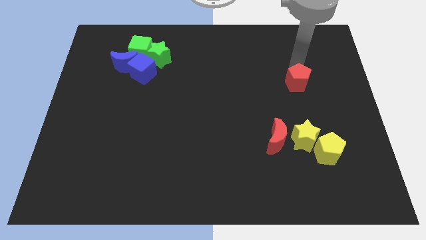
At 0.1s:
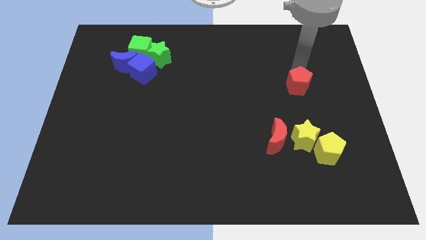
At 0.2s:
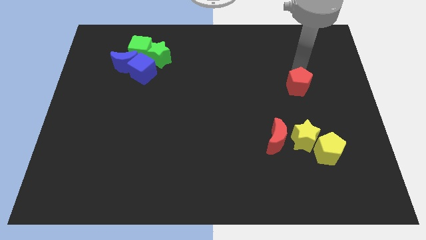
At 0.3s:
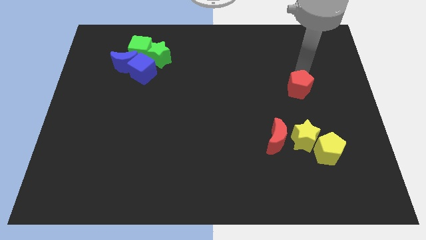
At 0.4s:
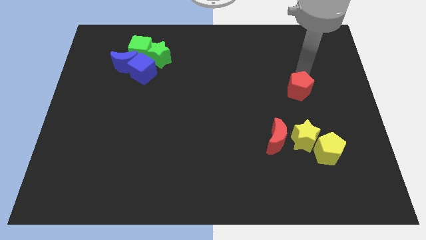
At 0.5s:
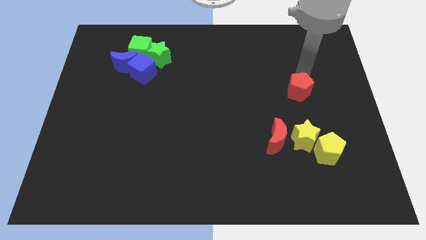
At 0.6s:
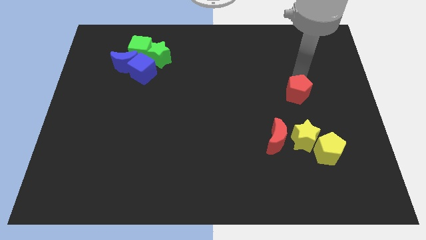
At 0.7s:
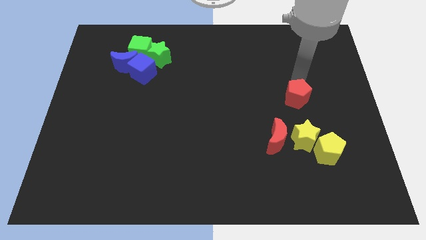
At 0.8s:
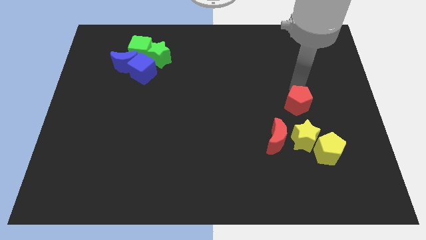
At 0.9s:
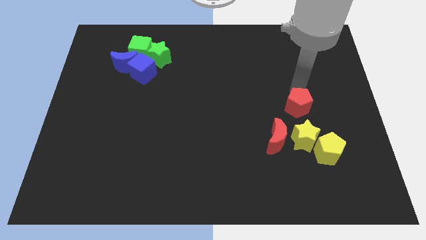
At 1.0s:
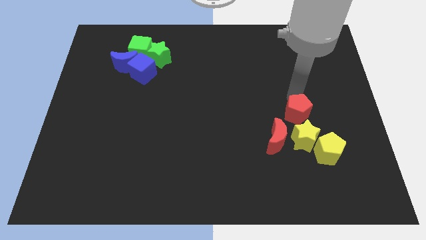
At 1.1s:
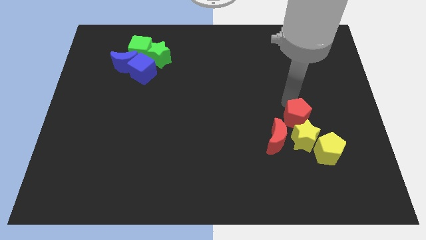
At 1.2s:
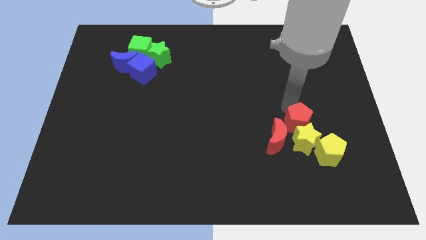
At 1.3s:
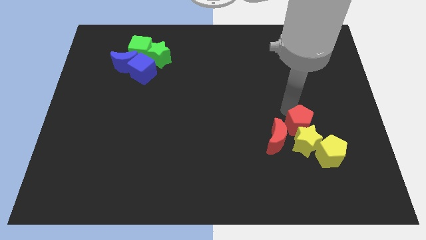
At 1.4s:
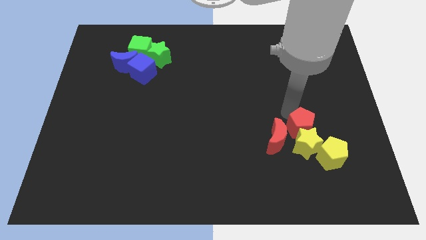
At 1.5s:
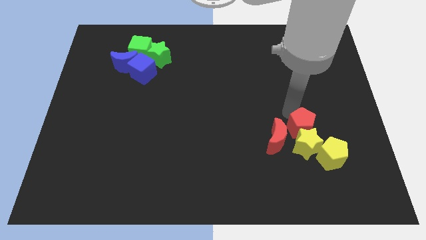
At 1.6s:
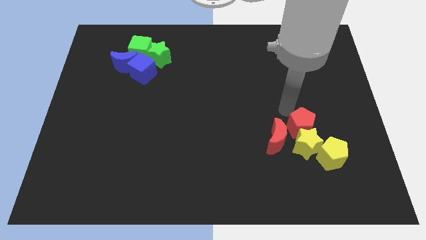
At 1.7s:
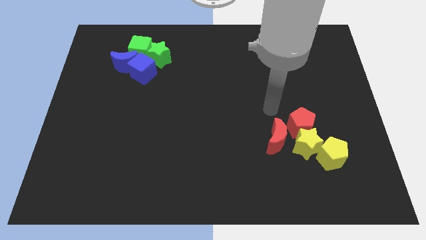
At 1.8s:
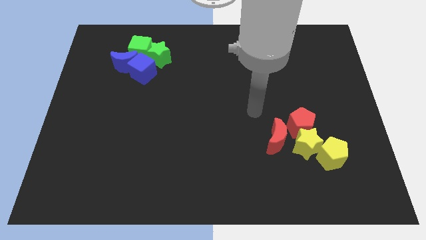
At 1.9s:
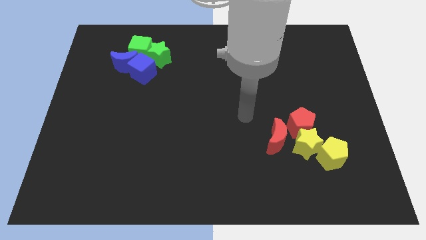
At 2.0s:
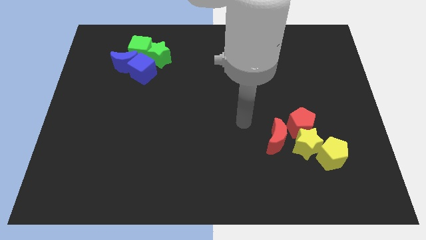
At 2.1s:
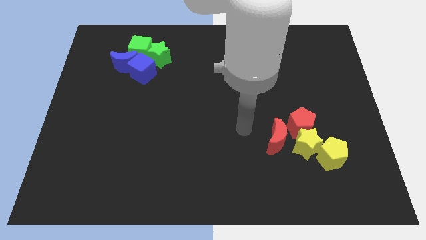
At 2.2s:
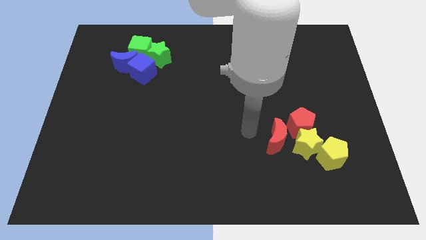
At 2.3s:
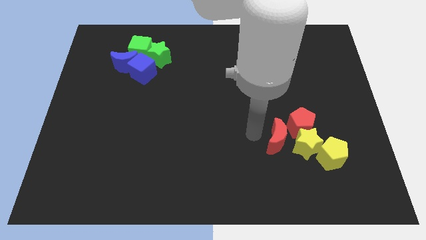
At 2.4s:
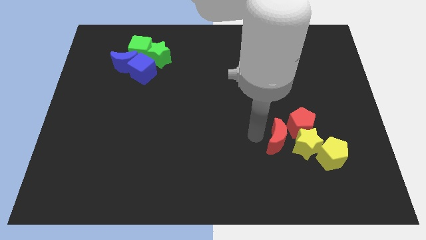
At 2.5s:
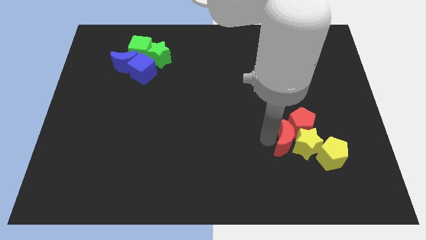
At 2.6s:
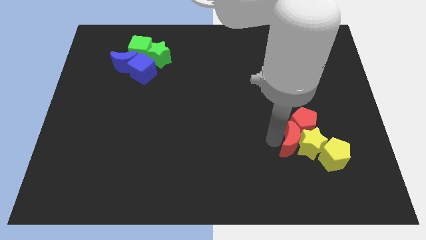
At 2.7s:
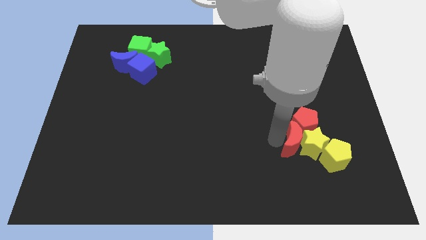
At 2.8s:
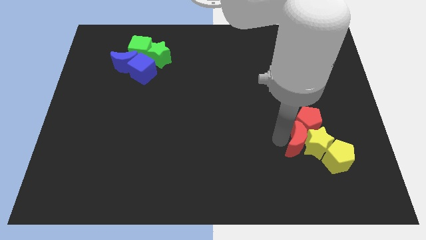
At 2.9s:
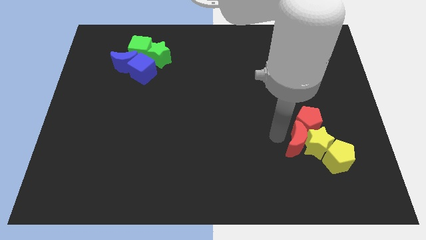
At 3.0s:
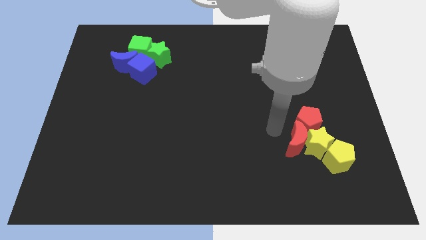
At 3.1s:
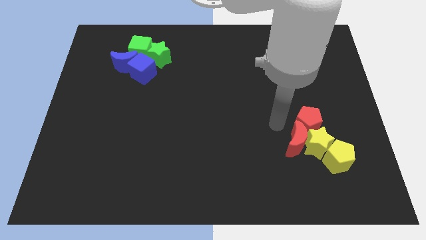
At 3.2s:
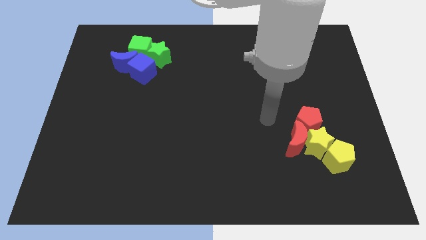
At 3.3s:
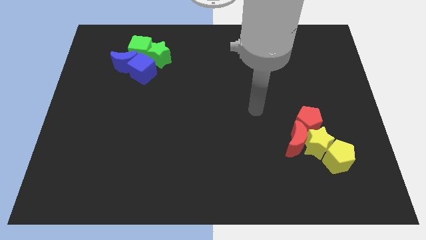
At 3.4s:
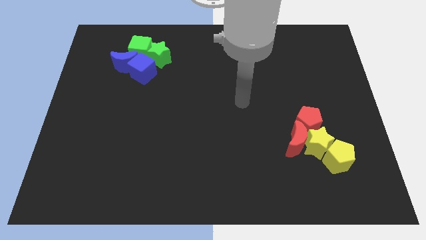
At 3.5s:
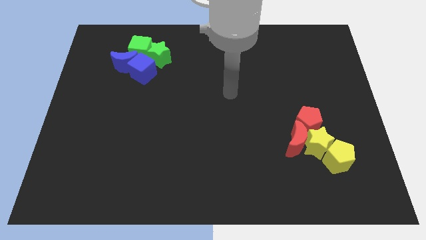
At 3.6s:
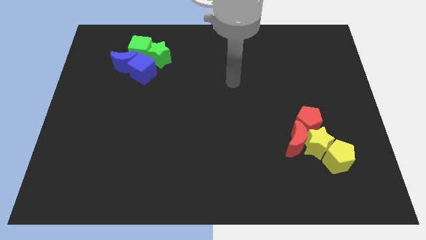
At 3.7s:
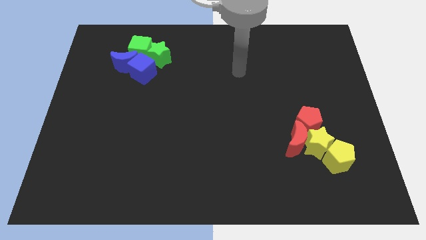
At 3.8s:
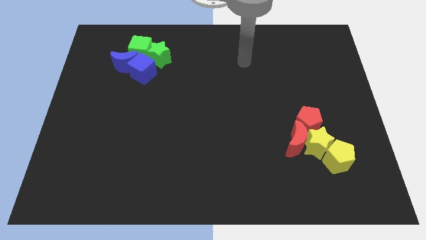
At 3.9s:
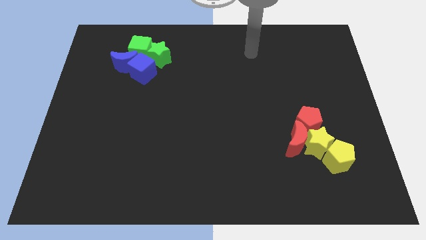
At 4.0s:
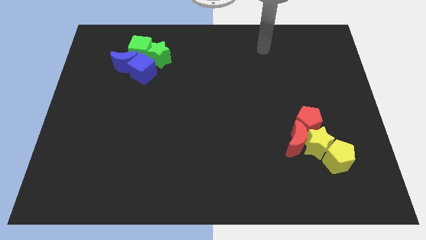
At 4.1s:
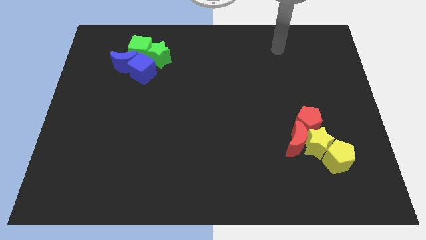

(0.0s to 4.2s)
move red blocks into yellow star

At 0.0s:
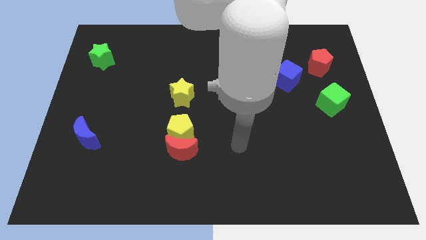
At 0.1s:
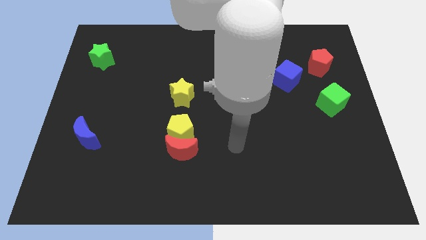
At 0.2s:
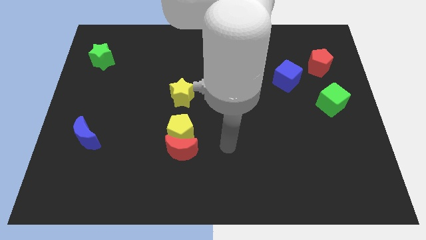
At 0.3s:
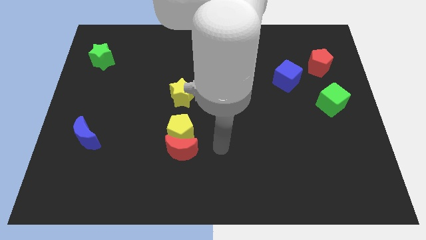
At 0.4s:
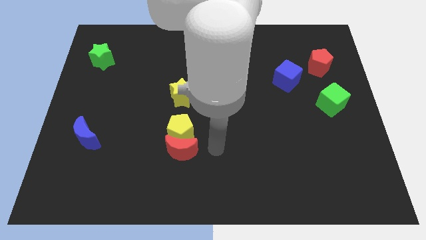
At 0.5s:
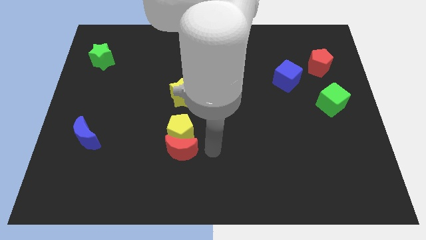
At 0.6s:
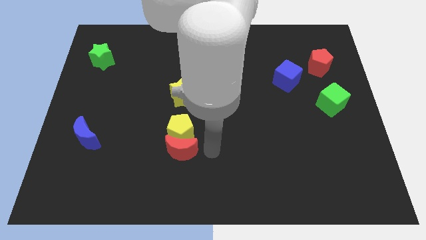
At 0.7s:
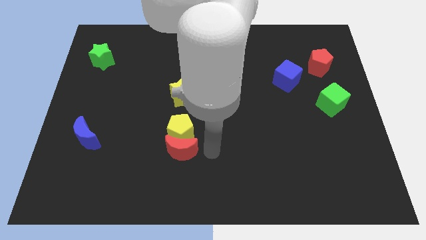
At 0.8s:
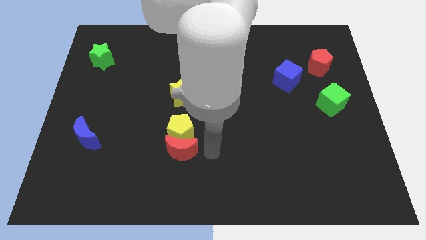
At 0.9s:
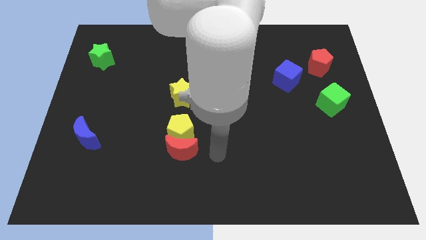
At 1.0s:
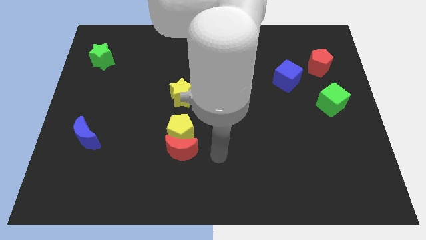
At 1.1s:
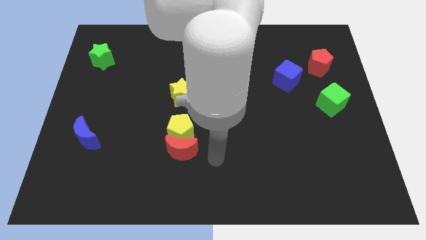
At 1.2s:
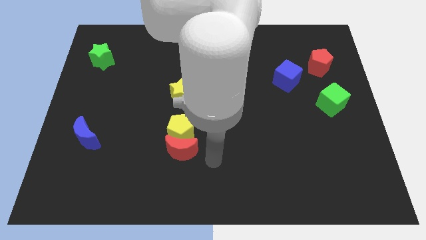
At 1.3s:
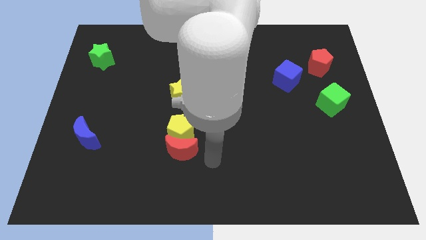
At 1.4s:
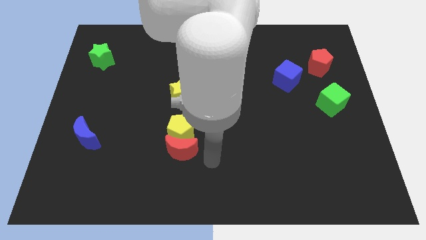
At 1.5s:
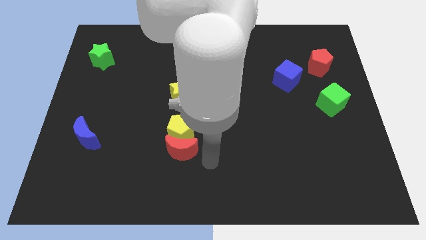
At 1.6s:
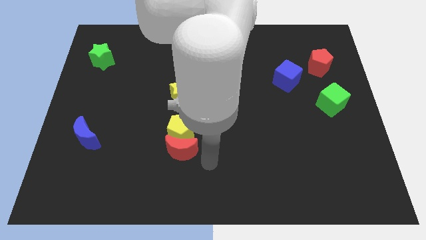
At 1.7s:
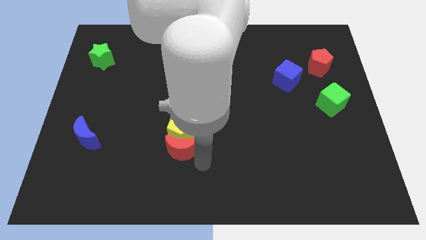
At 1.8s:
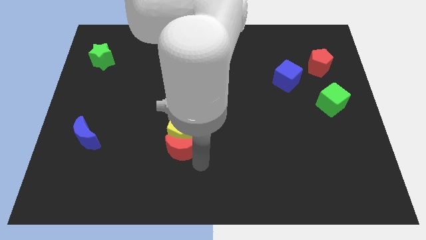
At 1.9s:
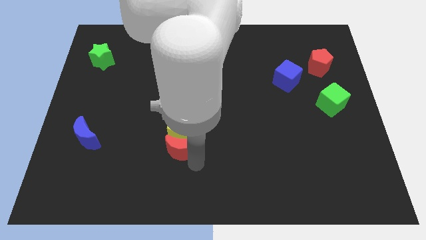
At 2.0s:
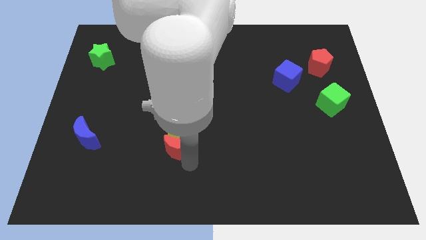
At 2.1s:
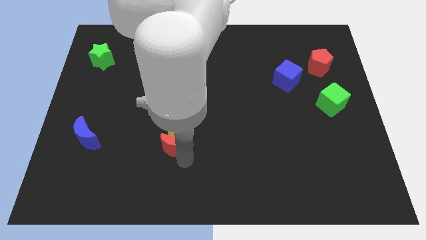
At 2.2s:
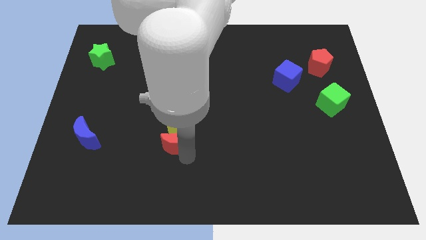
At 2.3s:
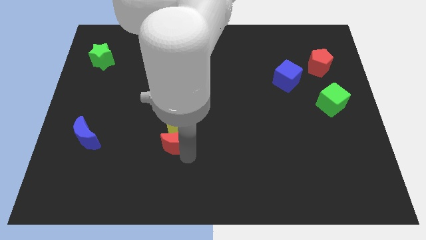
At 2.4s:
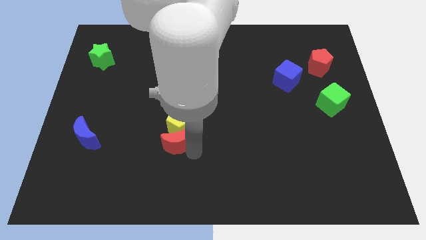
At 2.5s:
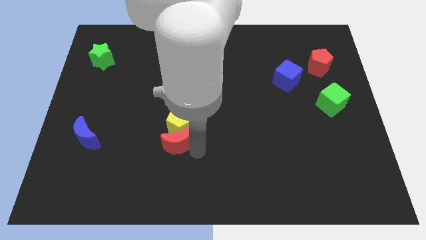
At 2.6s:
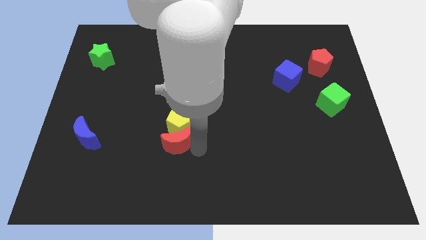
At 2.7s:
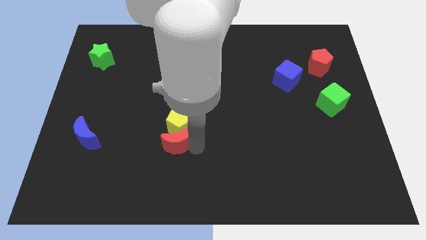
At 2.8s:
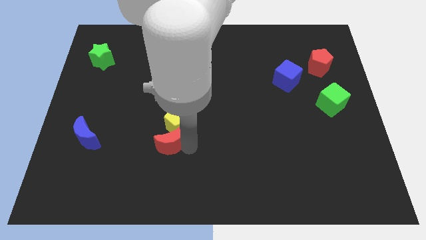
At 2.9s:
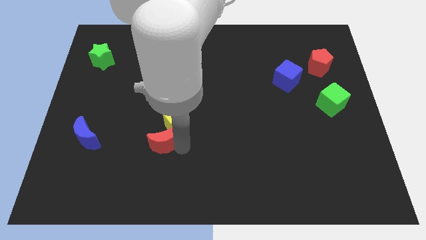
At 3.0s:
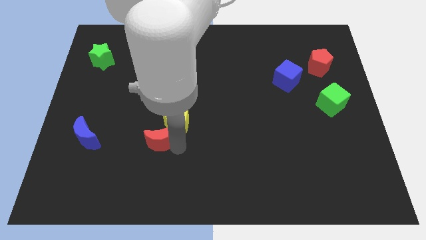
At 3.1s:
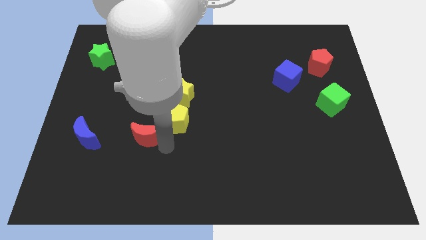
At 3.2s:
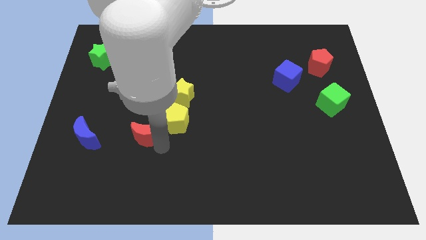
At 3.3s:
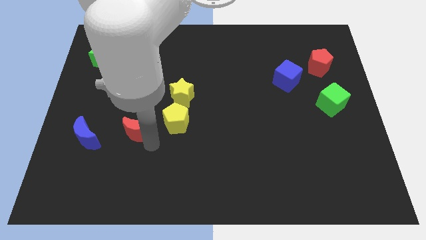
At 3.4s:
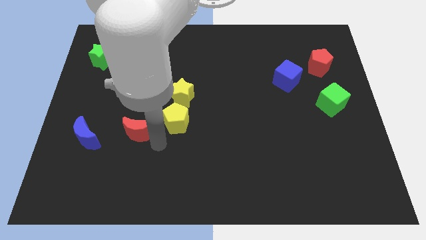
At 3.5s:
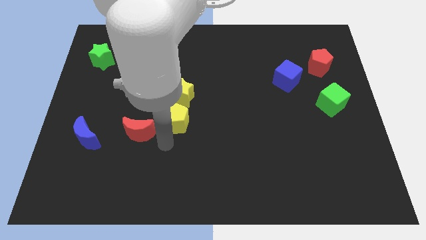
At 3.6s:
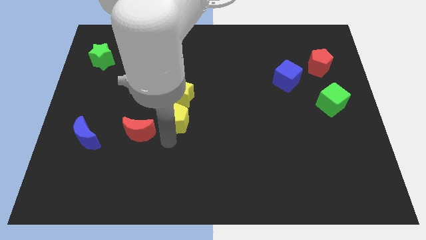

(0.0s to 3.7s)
place the red crescent to the left side of the yellow pentagon

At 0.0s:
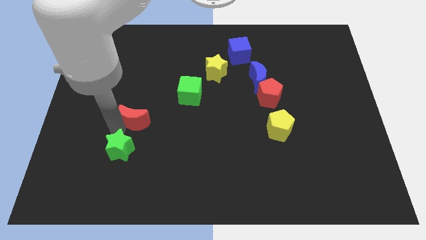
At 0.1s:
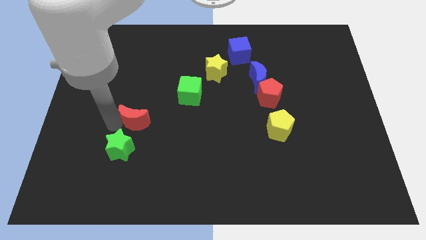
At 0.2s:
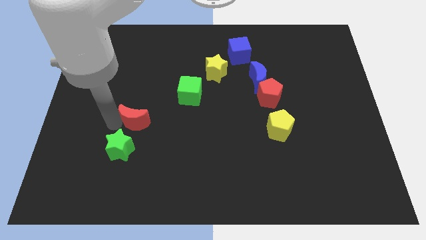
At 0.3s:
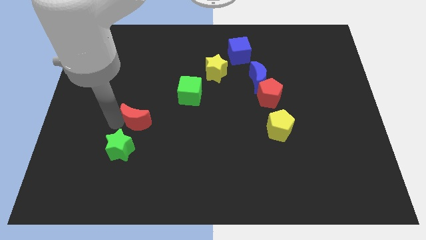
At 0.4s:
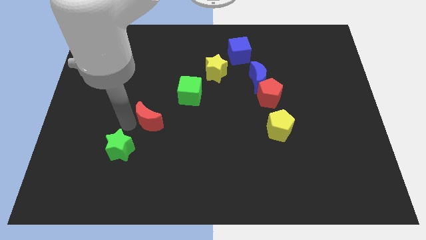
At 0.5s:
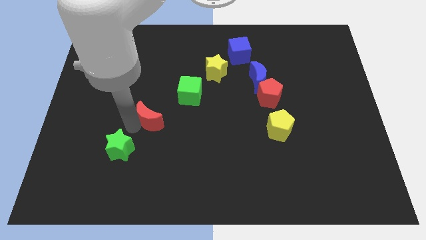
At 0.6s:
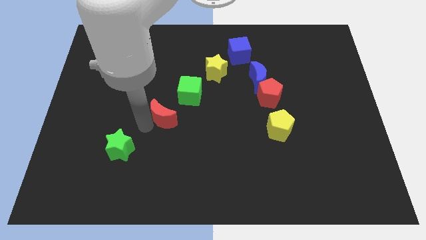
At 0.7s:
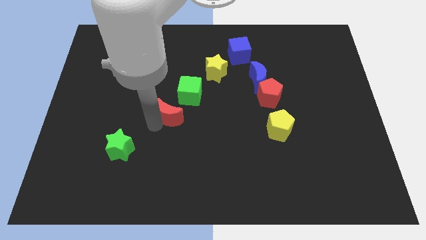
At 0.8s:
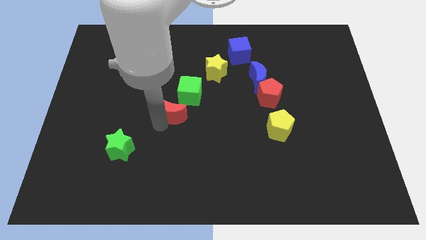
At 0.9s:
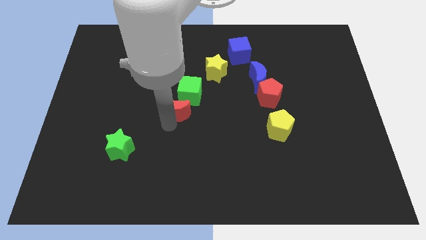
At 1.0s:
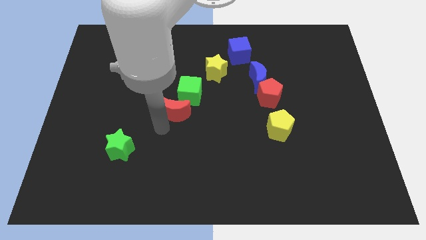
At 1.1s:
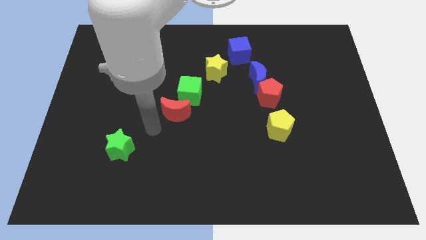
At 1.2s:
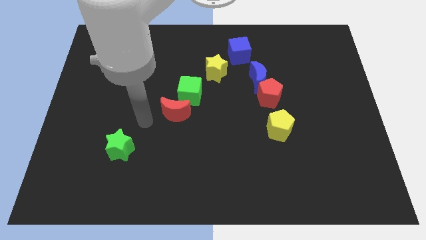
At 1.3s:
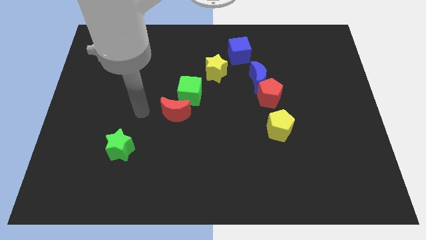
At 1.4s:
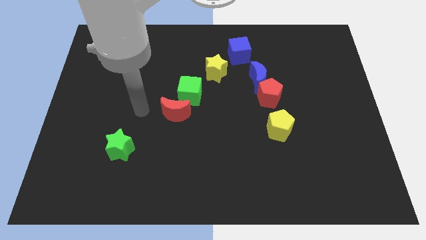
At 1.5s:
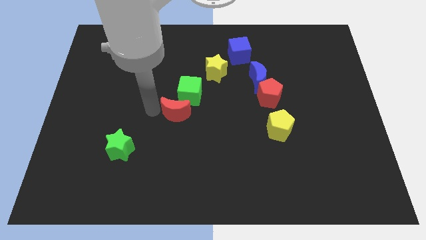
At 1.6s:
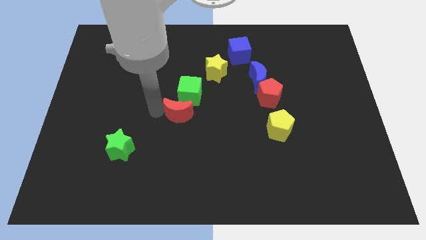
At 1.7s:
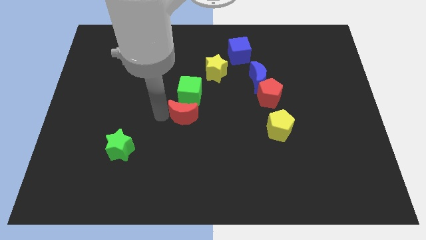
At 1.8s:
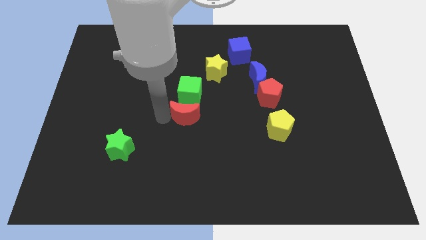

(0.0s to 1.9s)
slide the red moon below the green cube
